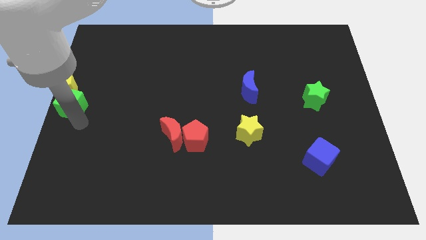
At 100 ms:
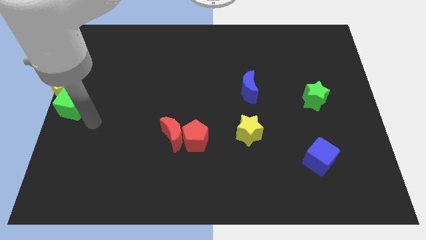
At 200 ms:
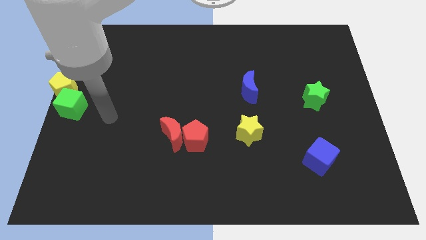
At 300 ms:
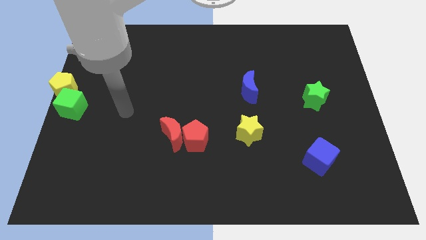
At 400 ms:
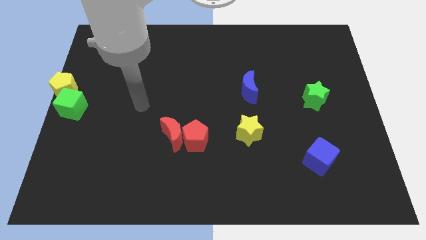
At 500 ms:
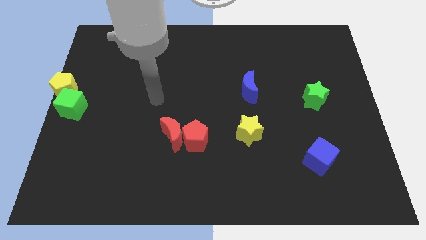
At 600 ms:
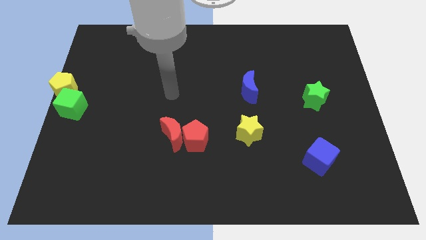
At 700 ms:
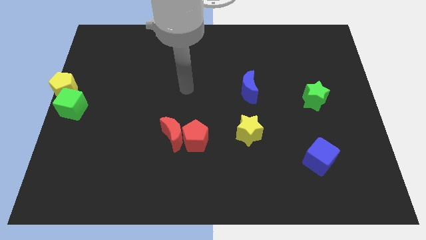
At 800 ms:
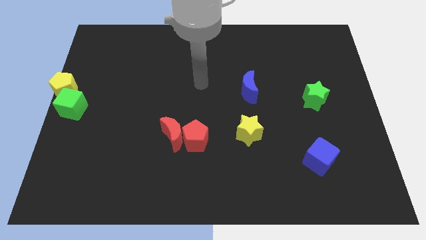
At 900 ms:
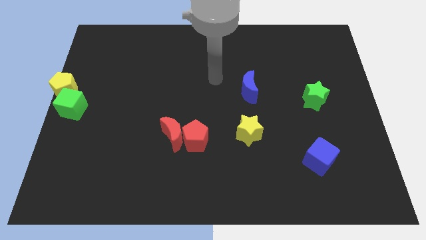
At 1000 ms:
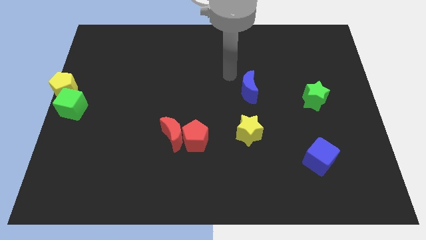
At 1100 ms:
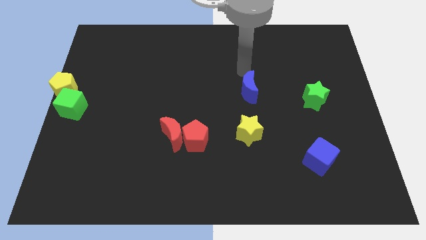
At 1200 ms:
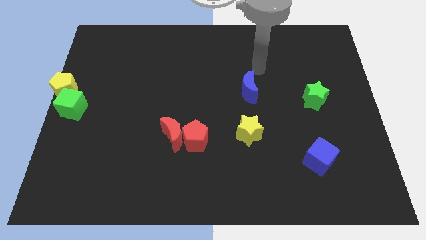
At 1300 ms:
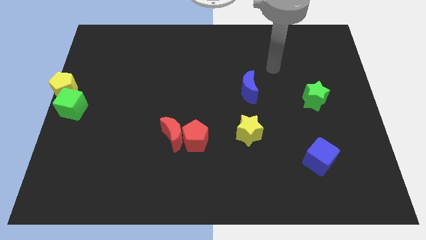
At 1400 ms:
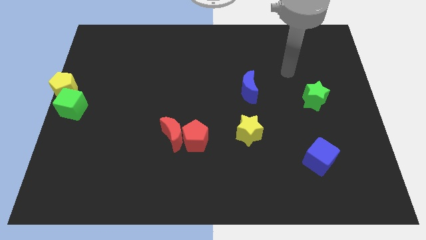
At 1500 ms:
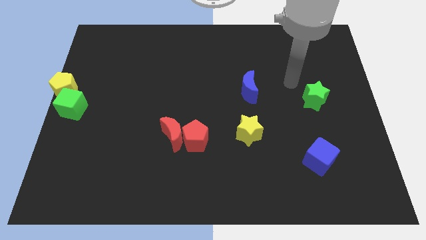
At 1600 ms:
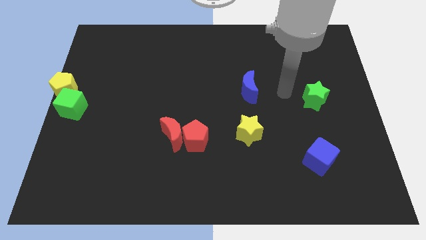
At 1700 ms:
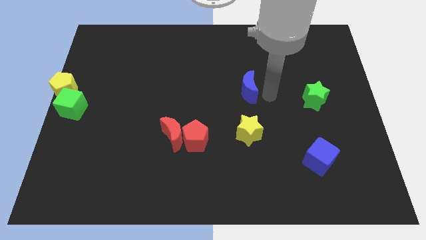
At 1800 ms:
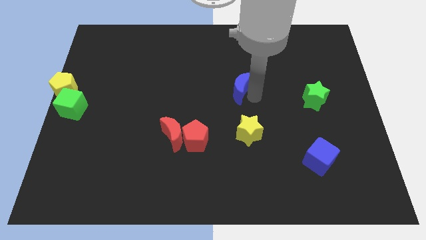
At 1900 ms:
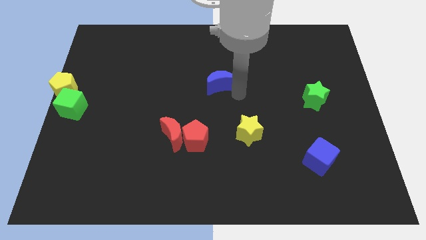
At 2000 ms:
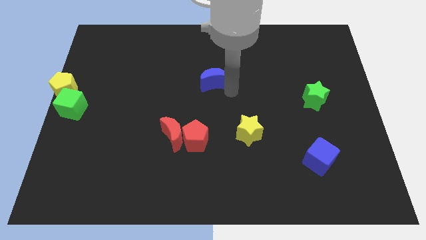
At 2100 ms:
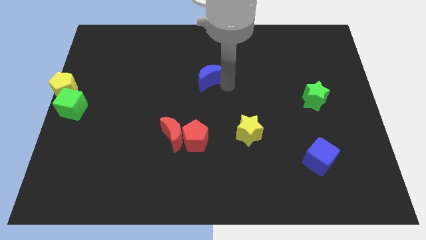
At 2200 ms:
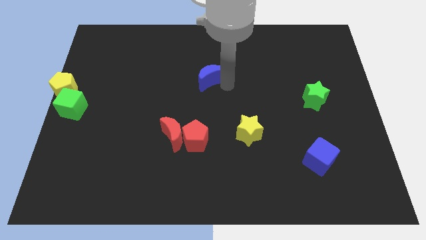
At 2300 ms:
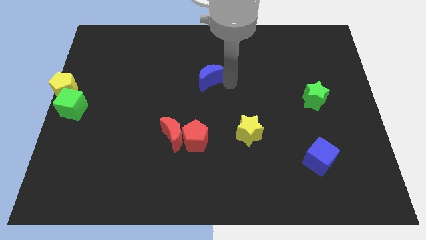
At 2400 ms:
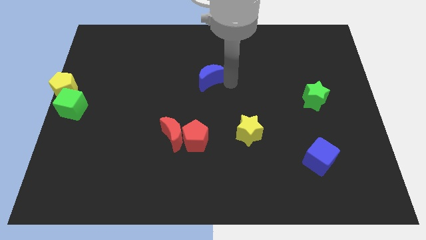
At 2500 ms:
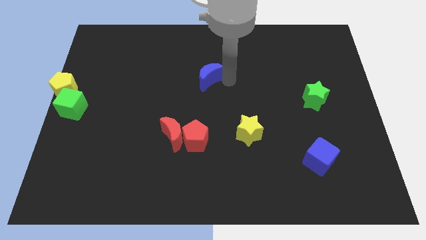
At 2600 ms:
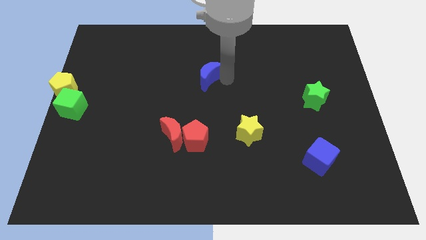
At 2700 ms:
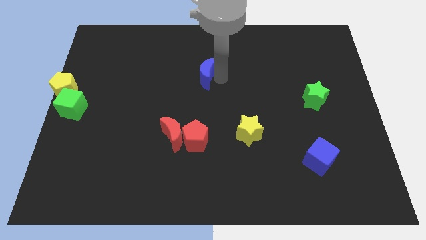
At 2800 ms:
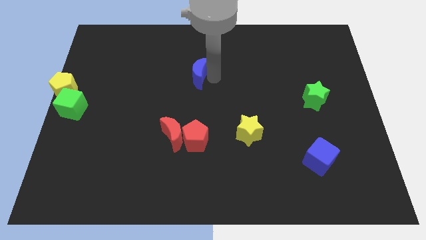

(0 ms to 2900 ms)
place blue moon to the top of red pentagon

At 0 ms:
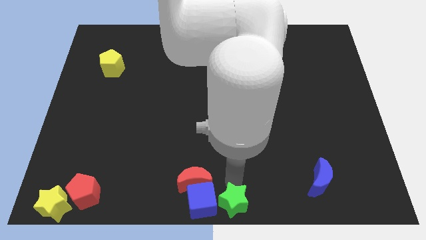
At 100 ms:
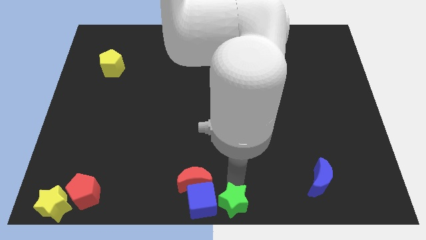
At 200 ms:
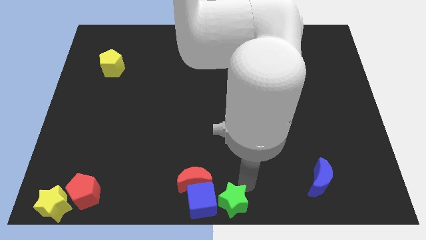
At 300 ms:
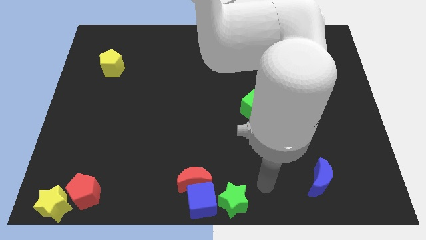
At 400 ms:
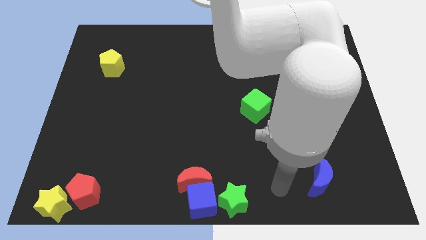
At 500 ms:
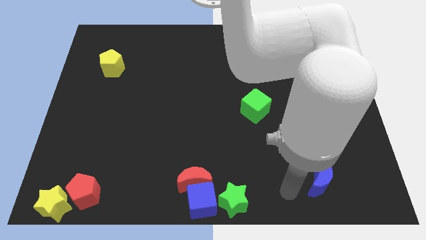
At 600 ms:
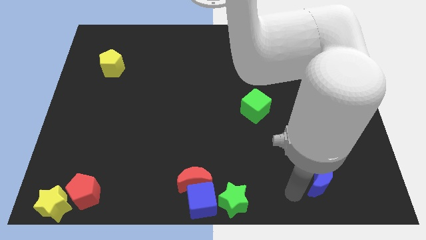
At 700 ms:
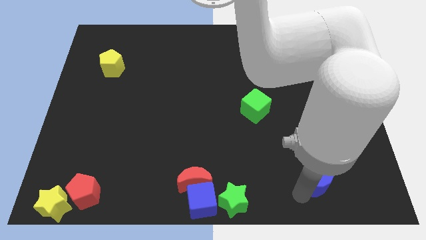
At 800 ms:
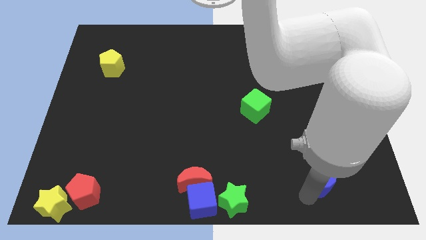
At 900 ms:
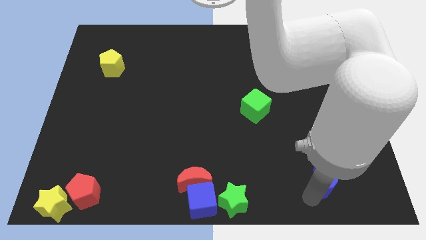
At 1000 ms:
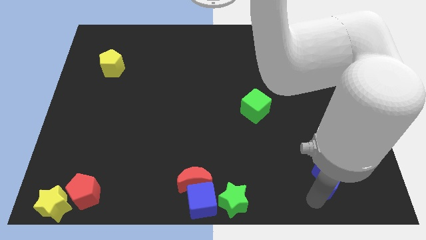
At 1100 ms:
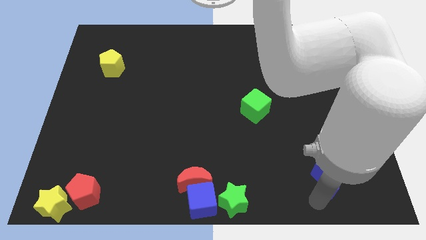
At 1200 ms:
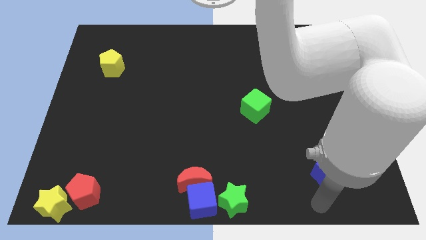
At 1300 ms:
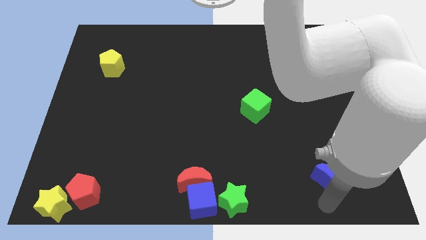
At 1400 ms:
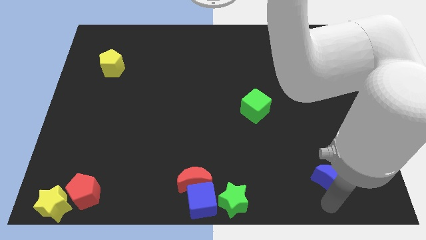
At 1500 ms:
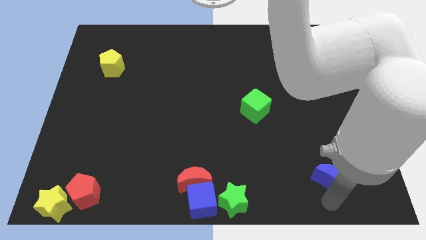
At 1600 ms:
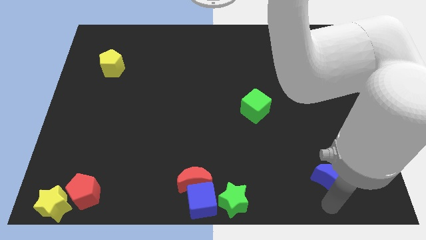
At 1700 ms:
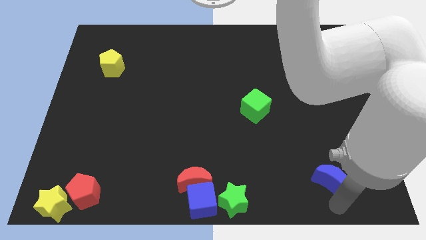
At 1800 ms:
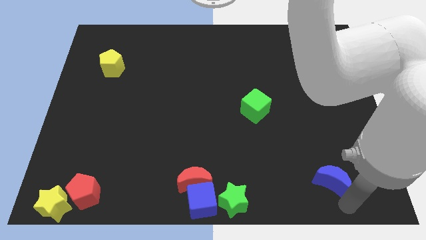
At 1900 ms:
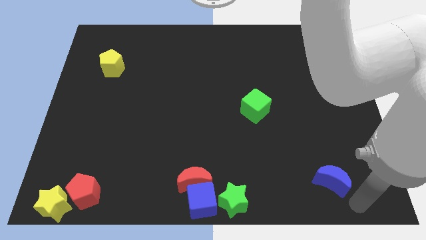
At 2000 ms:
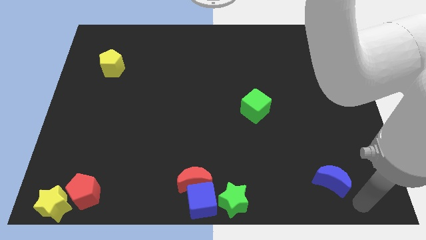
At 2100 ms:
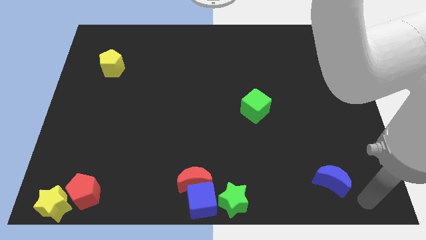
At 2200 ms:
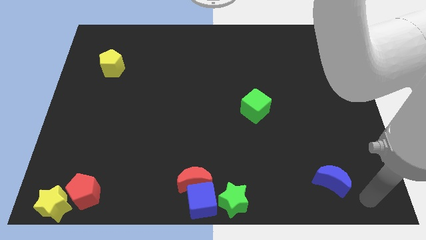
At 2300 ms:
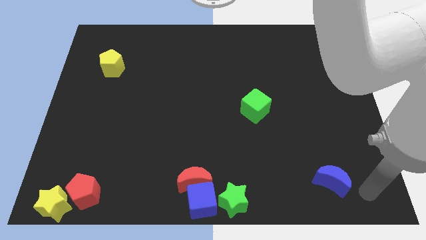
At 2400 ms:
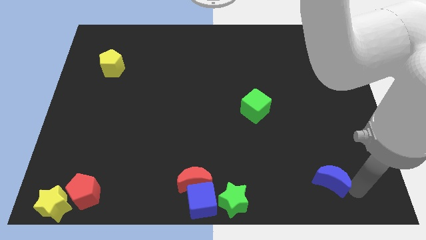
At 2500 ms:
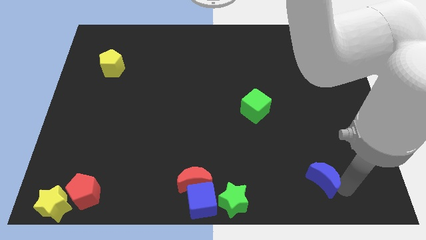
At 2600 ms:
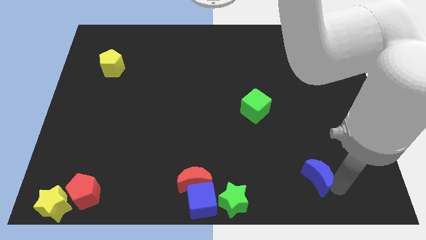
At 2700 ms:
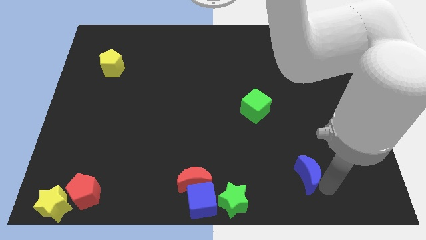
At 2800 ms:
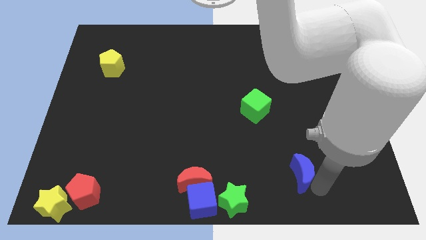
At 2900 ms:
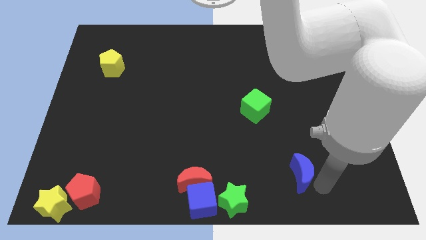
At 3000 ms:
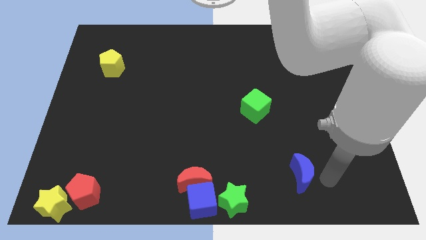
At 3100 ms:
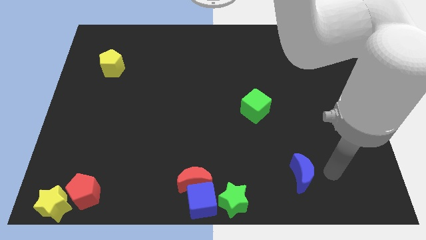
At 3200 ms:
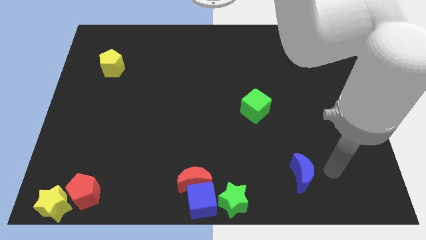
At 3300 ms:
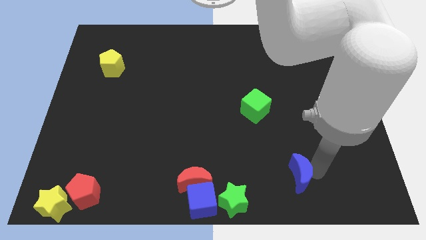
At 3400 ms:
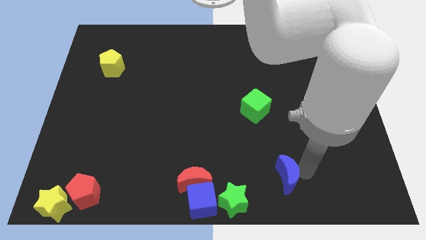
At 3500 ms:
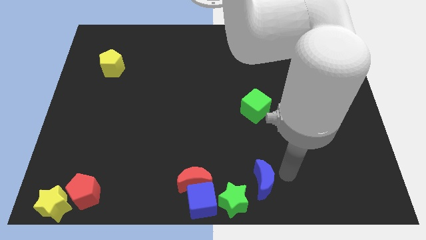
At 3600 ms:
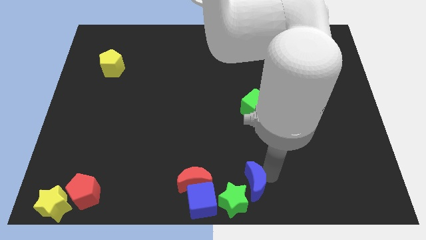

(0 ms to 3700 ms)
push the blue crescent to the bottom of the green cube

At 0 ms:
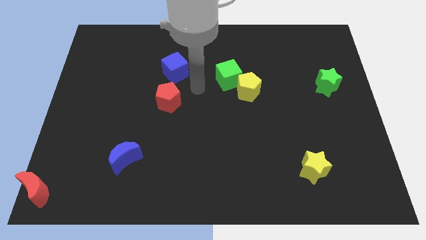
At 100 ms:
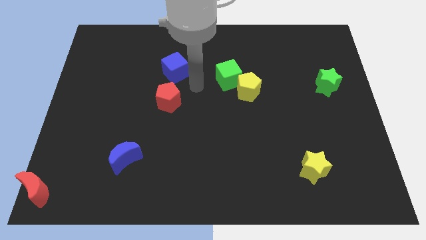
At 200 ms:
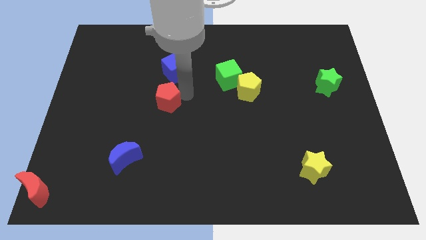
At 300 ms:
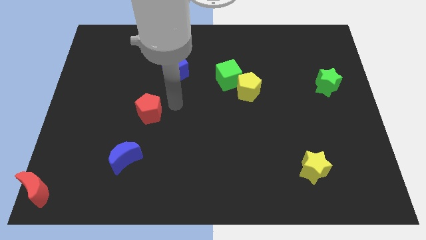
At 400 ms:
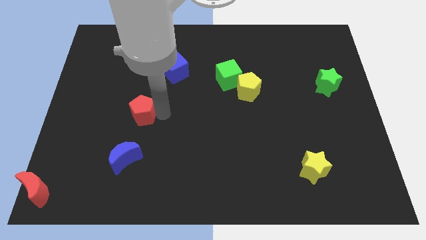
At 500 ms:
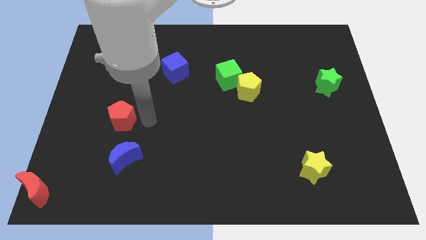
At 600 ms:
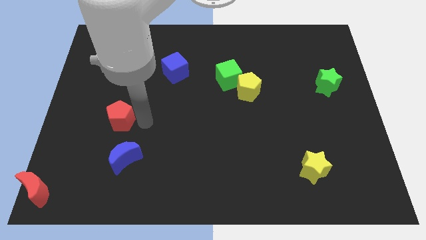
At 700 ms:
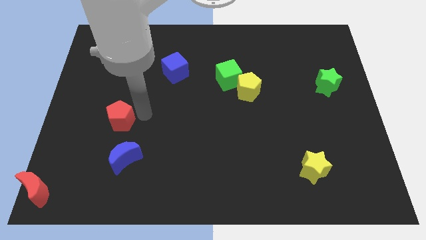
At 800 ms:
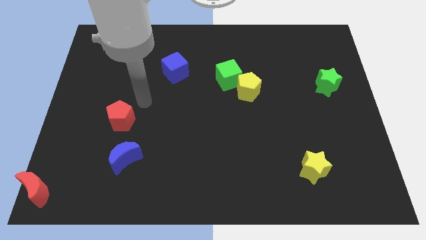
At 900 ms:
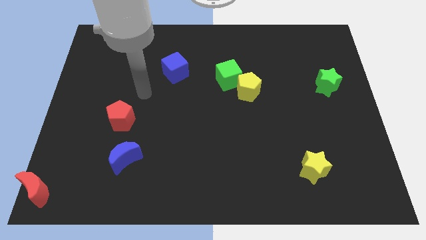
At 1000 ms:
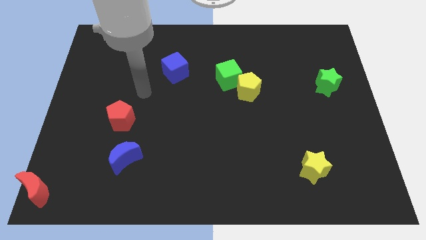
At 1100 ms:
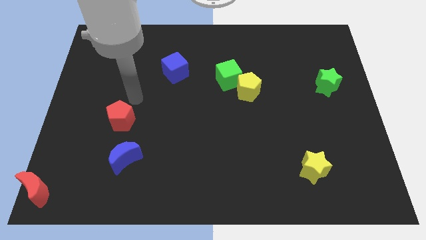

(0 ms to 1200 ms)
move the red pentagon to the top of the blue crescent

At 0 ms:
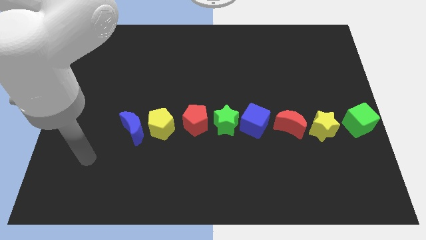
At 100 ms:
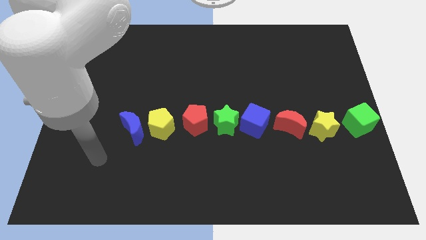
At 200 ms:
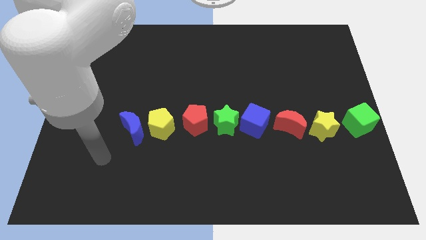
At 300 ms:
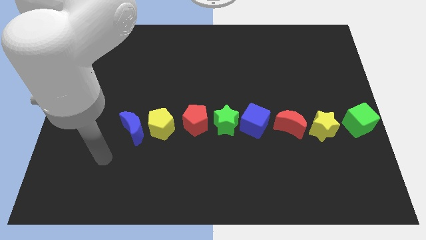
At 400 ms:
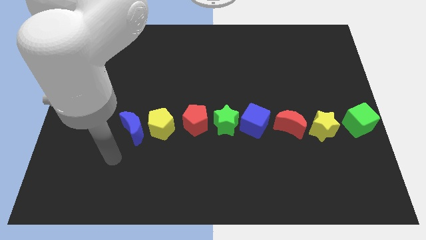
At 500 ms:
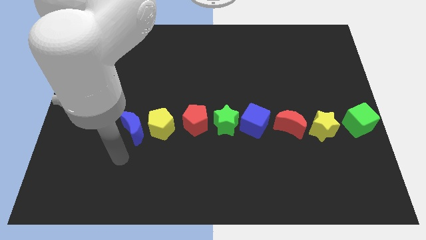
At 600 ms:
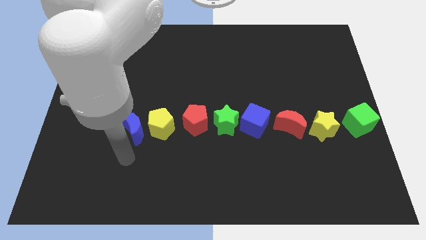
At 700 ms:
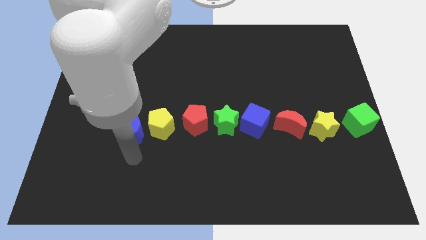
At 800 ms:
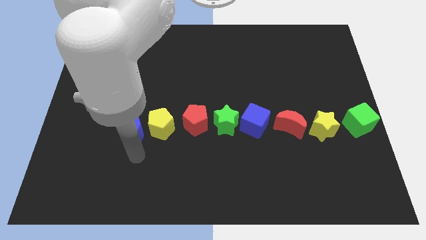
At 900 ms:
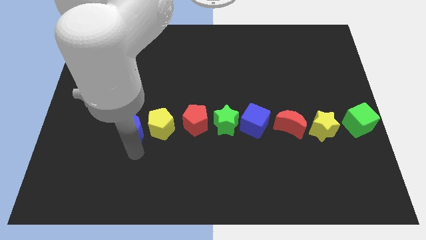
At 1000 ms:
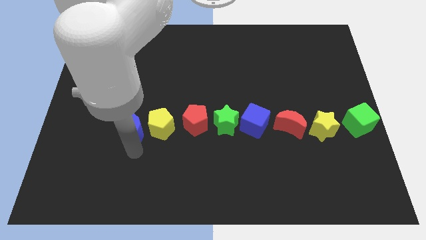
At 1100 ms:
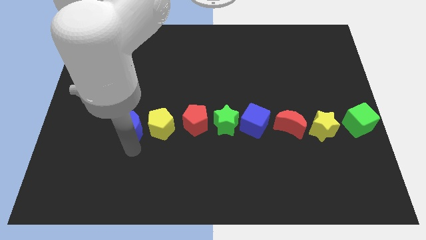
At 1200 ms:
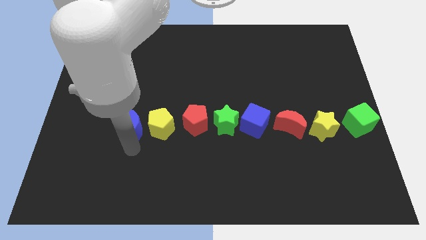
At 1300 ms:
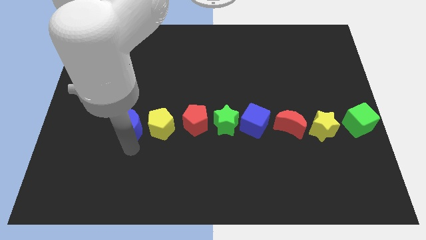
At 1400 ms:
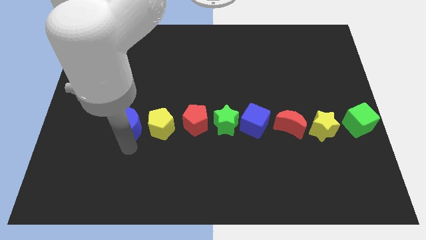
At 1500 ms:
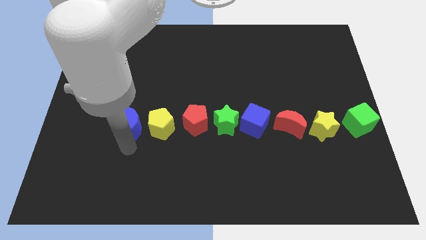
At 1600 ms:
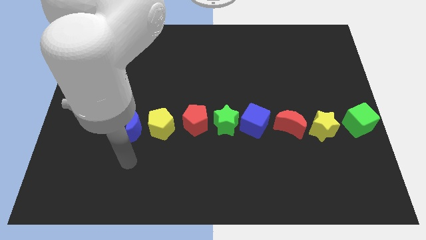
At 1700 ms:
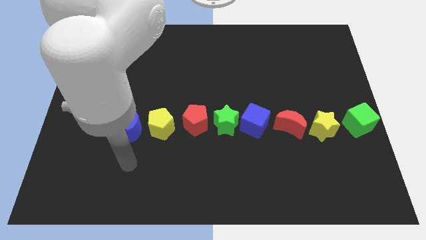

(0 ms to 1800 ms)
adjust the blue crescent to the left side of the yellow pentagon
